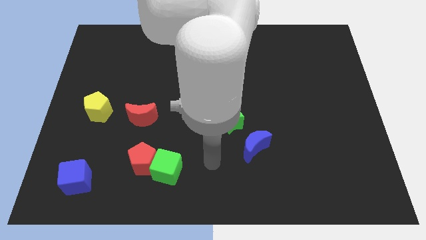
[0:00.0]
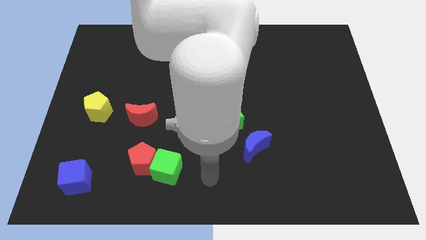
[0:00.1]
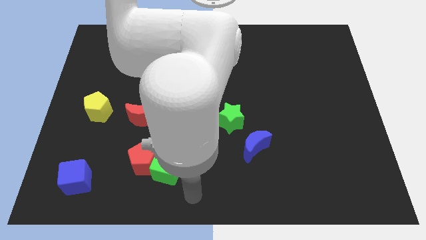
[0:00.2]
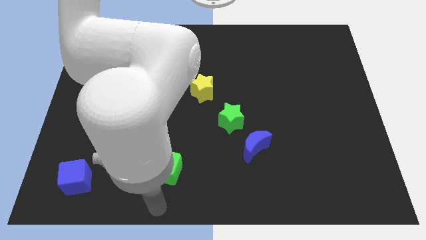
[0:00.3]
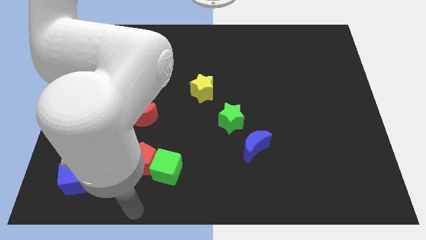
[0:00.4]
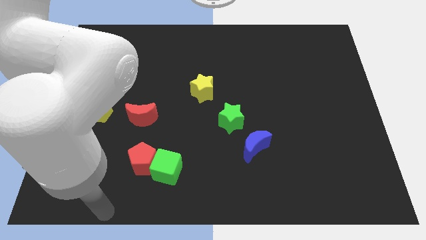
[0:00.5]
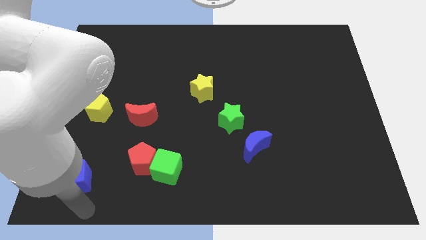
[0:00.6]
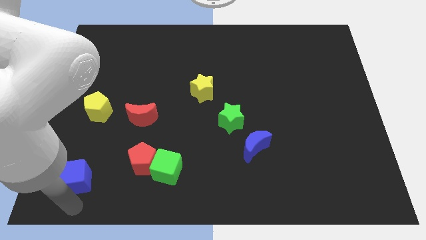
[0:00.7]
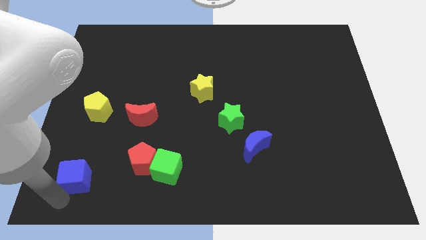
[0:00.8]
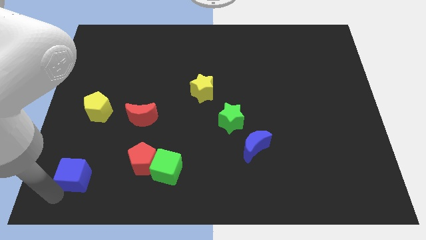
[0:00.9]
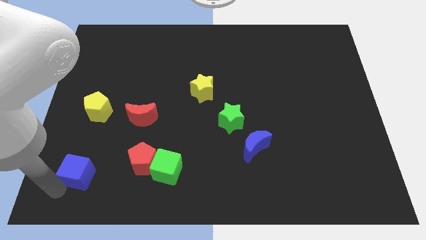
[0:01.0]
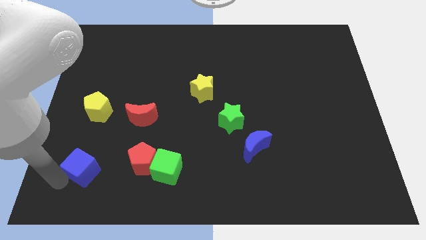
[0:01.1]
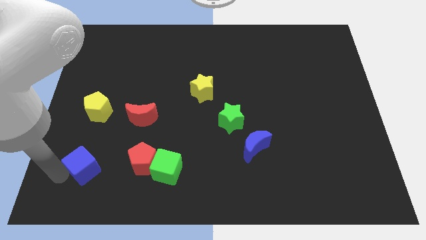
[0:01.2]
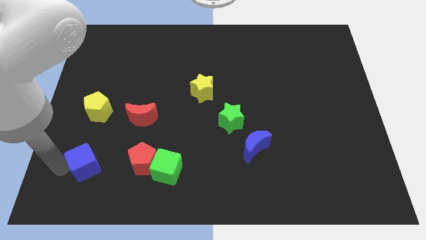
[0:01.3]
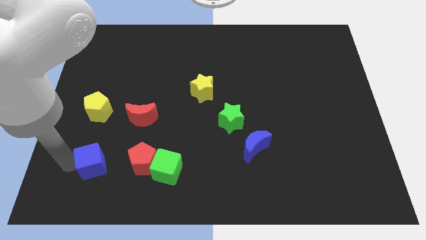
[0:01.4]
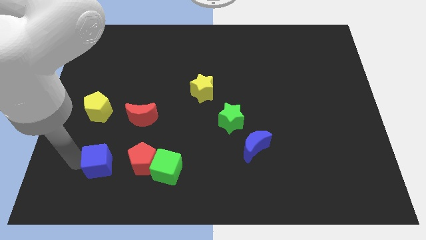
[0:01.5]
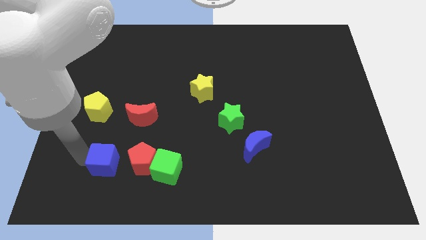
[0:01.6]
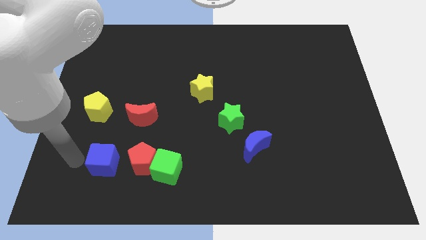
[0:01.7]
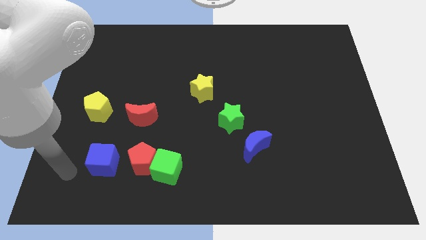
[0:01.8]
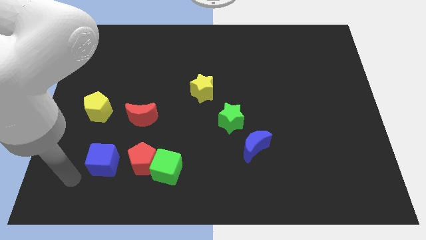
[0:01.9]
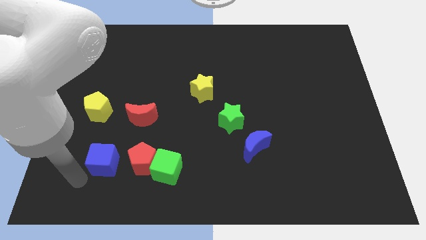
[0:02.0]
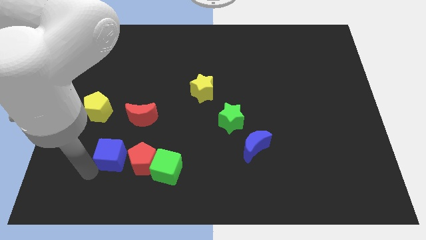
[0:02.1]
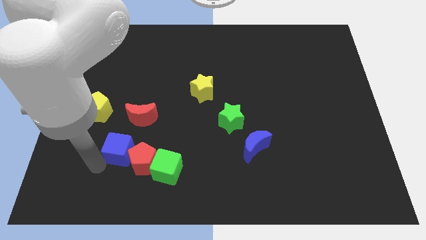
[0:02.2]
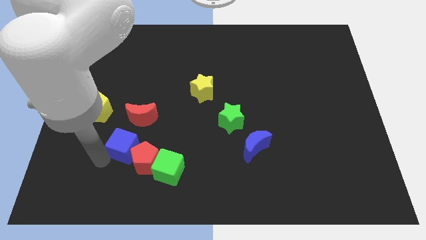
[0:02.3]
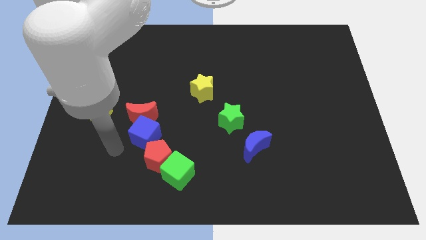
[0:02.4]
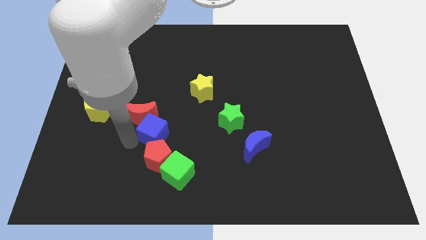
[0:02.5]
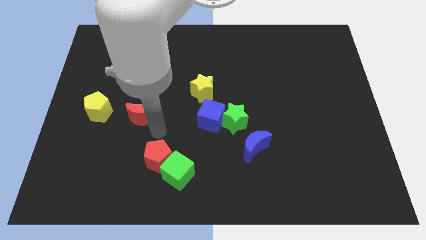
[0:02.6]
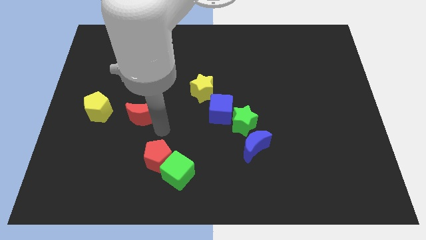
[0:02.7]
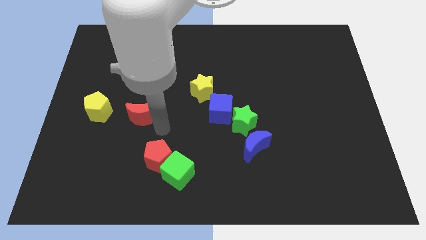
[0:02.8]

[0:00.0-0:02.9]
put the blue cube towards the green star

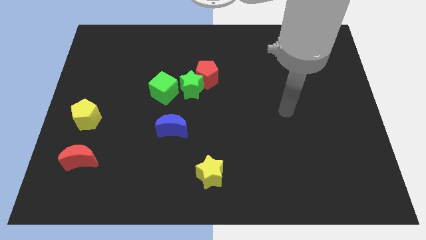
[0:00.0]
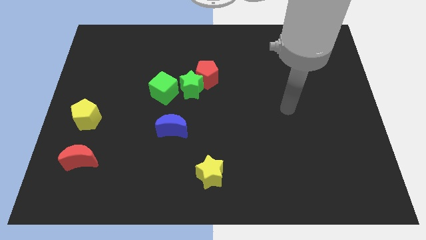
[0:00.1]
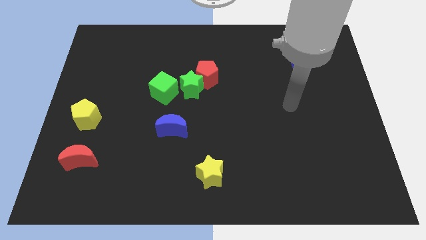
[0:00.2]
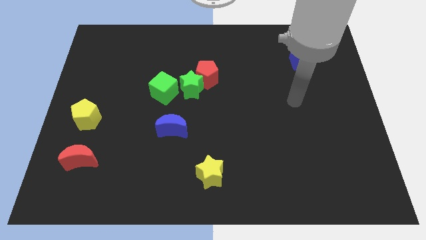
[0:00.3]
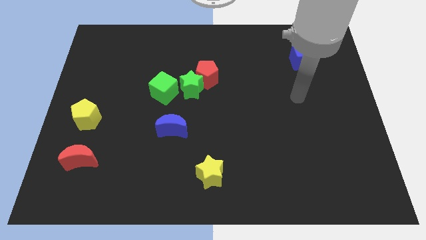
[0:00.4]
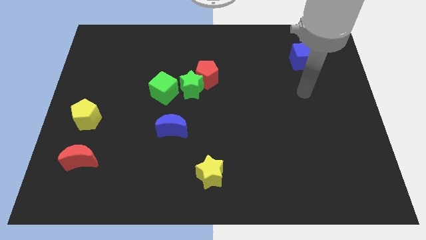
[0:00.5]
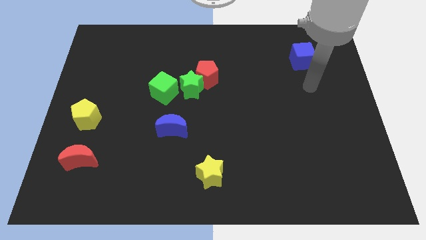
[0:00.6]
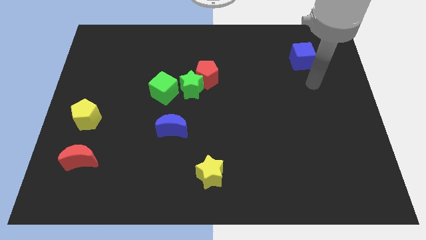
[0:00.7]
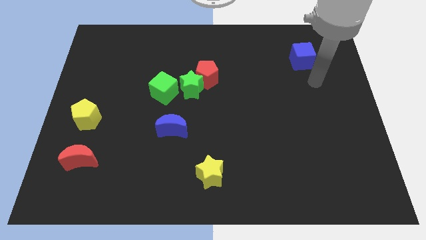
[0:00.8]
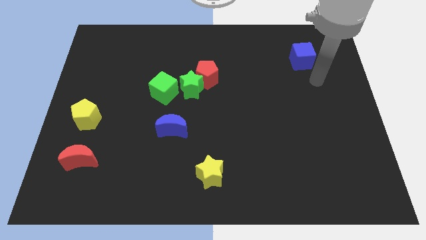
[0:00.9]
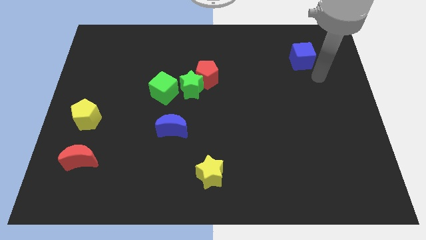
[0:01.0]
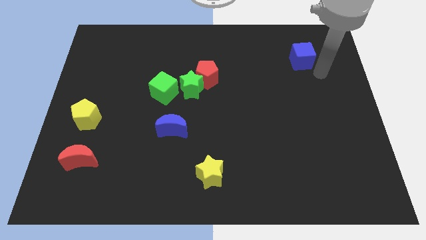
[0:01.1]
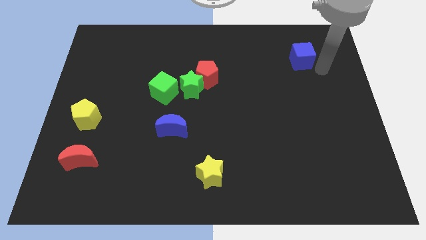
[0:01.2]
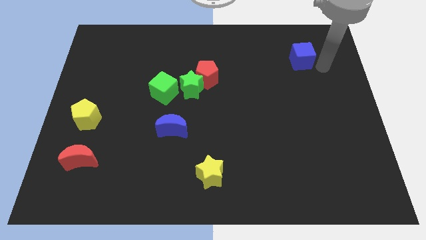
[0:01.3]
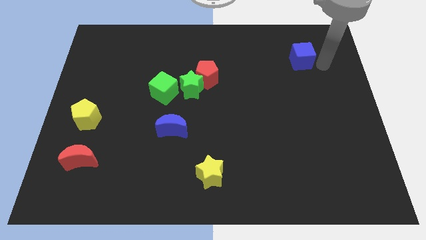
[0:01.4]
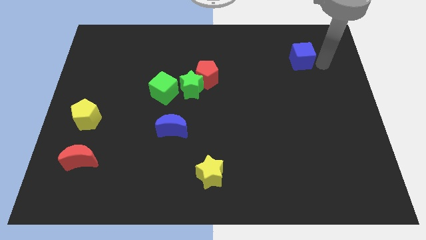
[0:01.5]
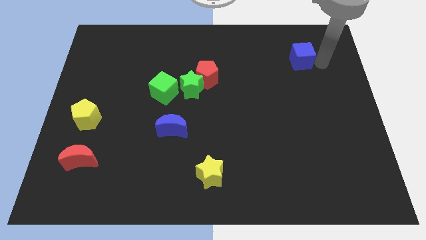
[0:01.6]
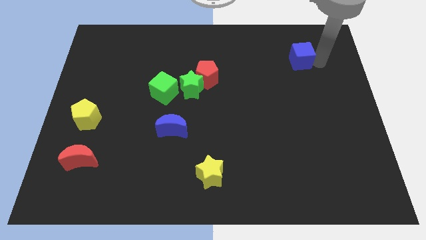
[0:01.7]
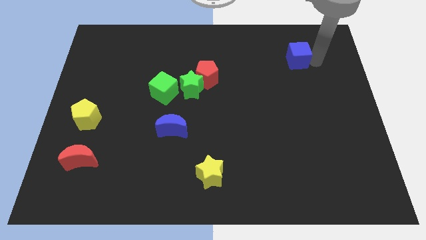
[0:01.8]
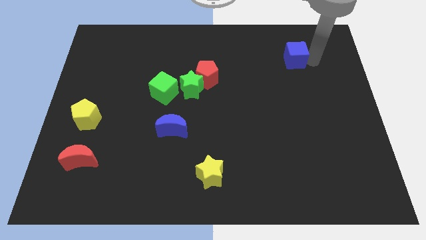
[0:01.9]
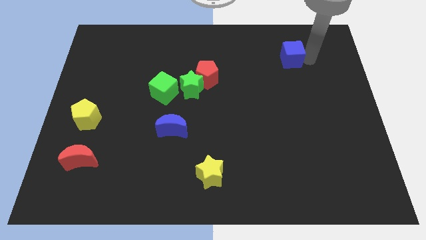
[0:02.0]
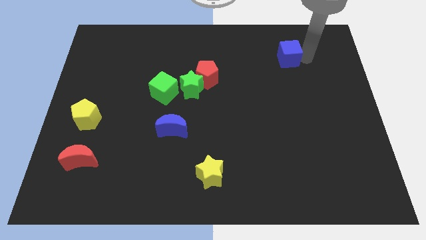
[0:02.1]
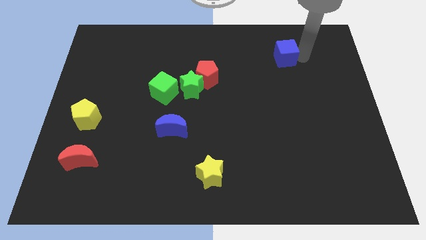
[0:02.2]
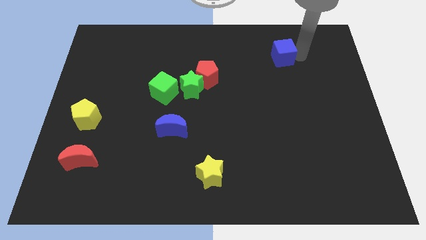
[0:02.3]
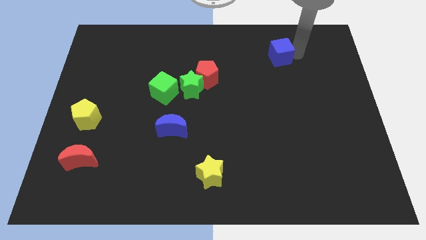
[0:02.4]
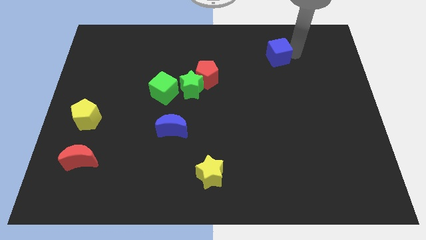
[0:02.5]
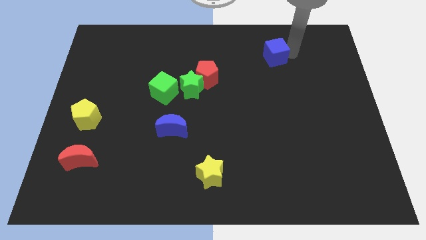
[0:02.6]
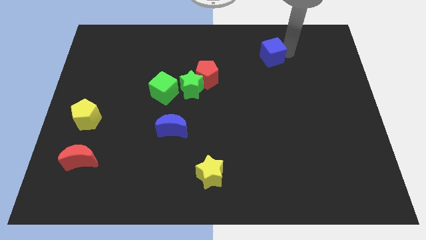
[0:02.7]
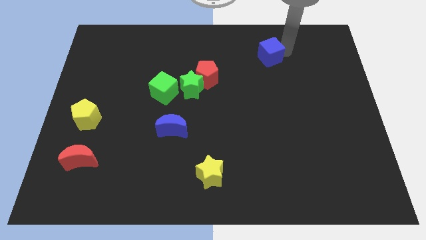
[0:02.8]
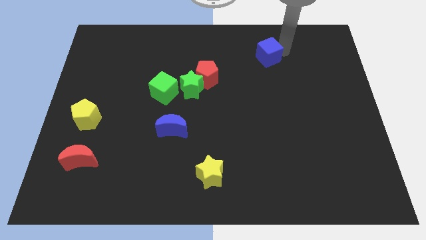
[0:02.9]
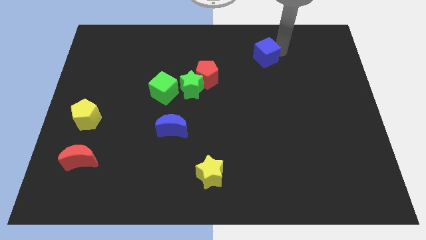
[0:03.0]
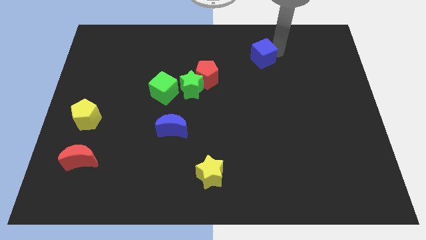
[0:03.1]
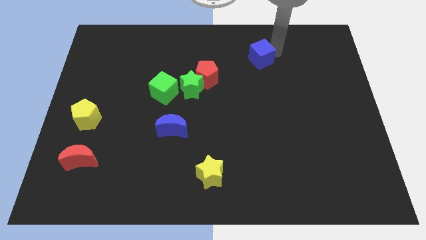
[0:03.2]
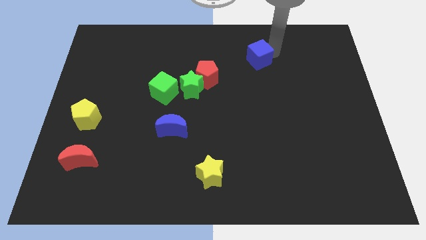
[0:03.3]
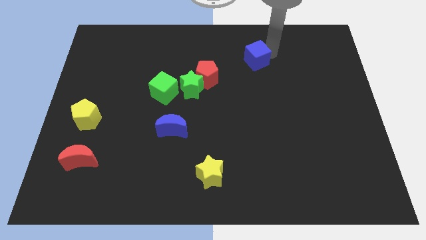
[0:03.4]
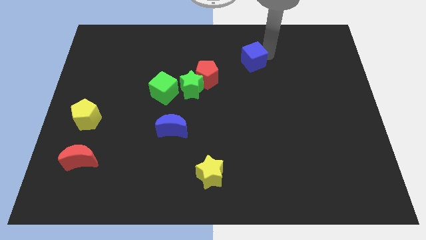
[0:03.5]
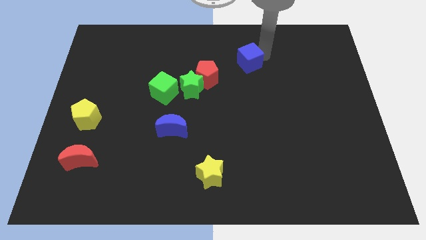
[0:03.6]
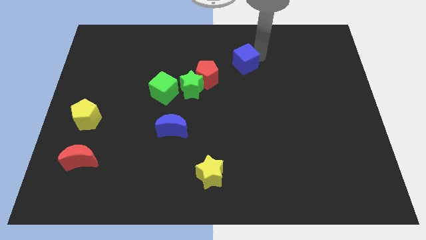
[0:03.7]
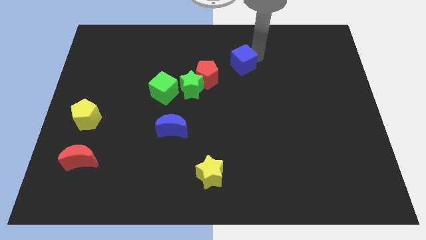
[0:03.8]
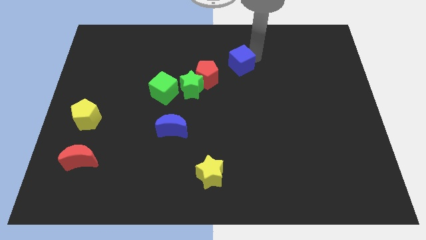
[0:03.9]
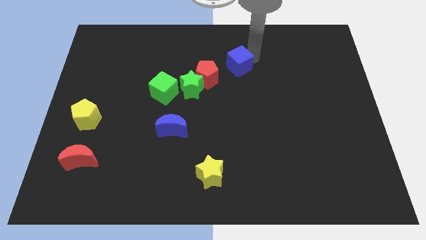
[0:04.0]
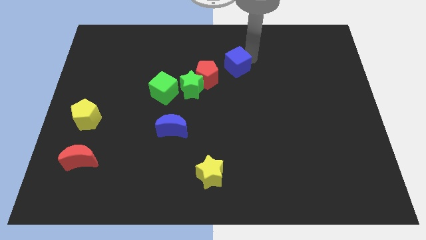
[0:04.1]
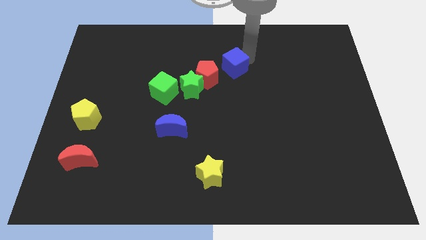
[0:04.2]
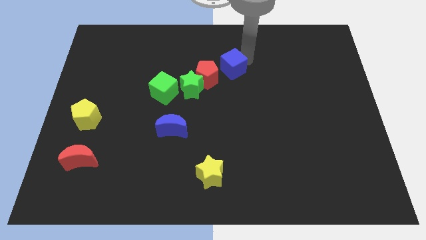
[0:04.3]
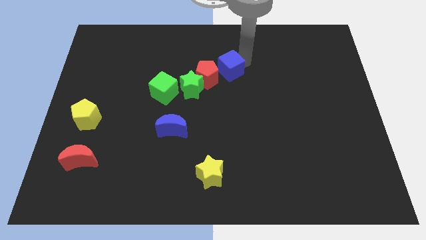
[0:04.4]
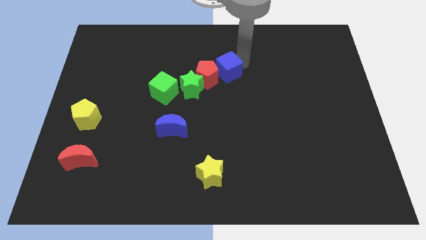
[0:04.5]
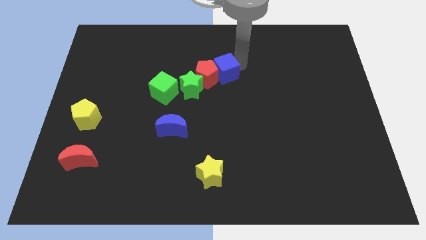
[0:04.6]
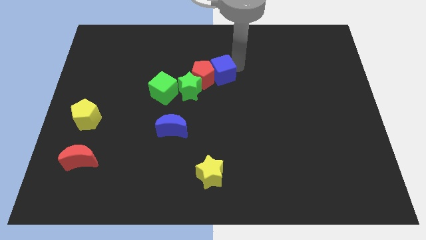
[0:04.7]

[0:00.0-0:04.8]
slide the blue cube to the red pentagon

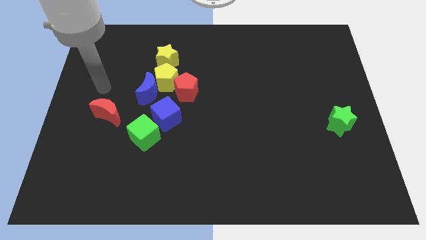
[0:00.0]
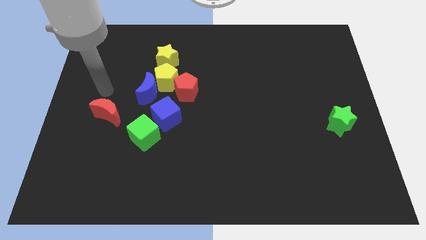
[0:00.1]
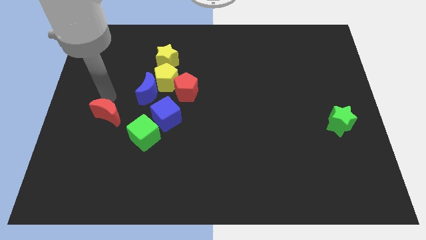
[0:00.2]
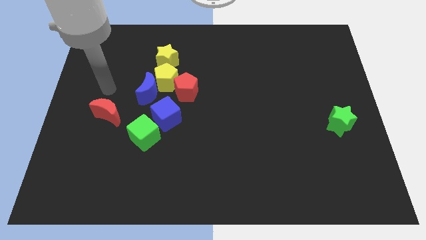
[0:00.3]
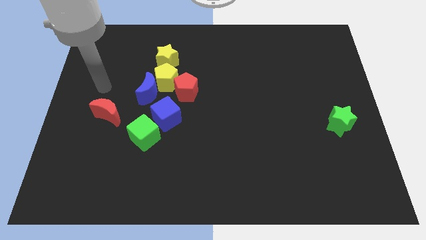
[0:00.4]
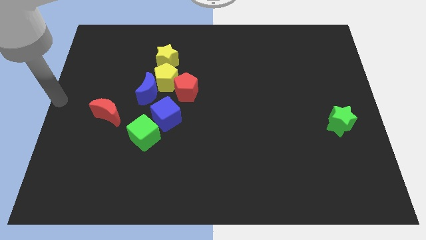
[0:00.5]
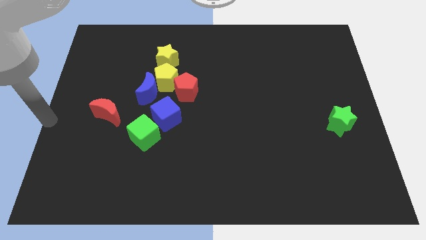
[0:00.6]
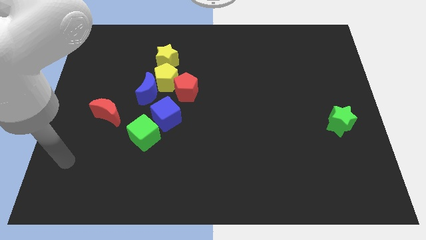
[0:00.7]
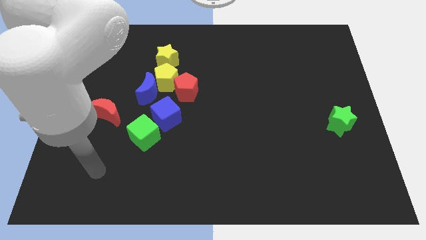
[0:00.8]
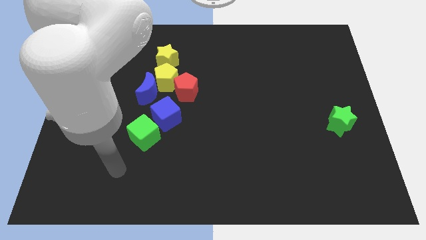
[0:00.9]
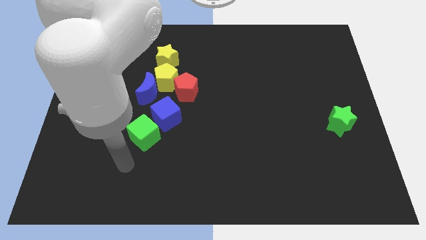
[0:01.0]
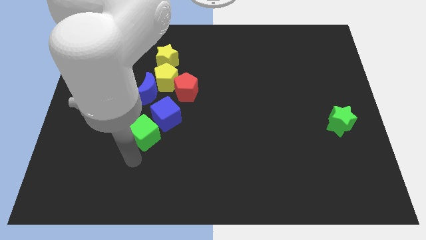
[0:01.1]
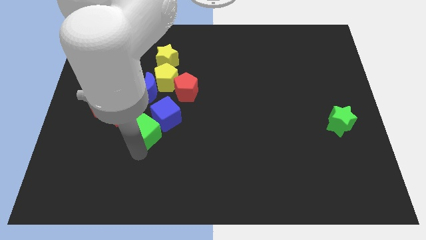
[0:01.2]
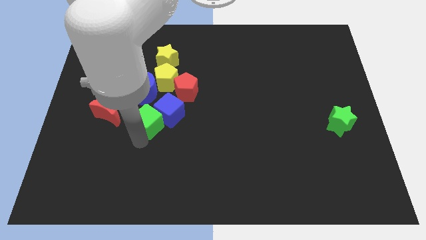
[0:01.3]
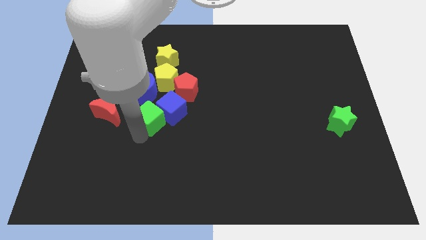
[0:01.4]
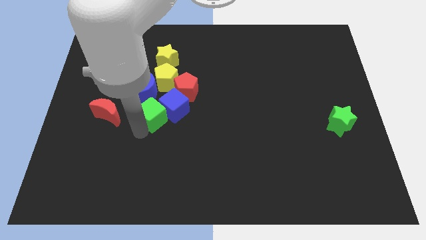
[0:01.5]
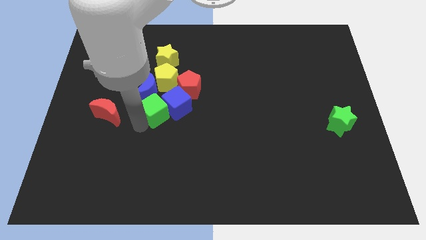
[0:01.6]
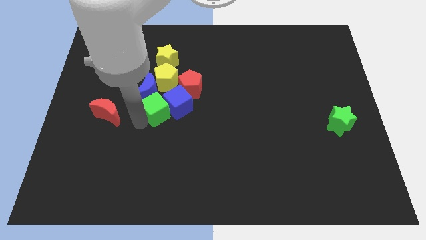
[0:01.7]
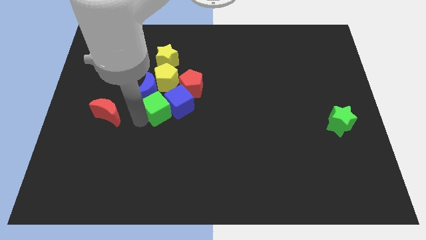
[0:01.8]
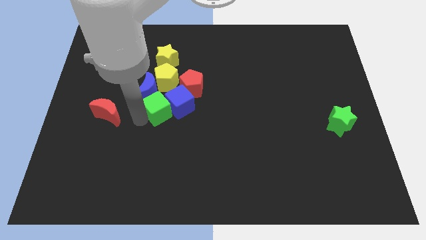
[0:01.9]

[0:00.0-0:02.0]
push the green cube towards the blue moon
